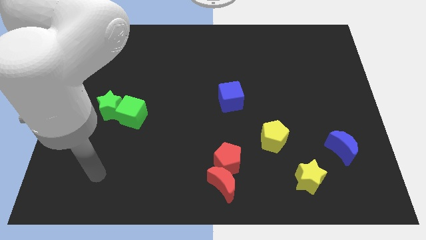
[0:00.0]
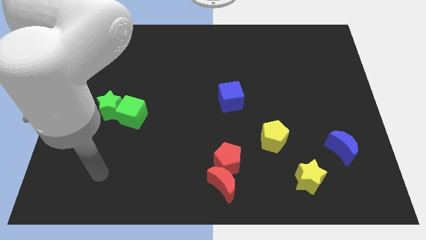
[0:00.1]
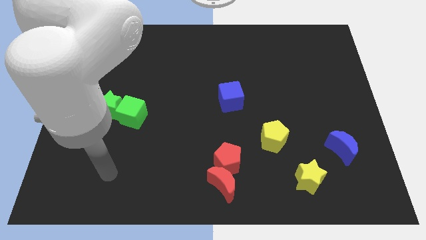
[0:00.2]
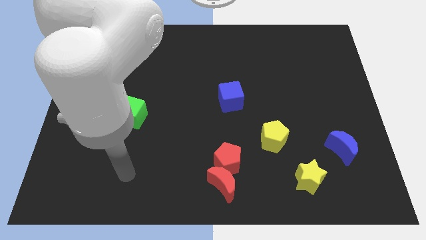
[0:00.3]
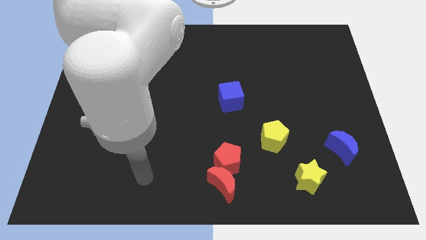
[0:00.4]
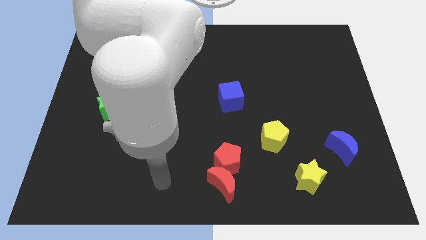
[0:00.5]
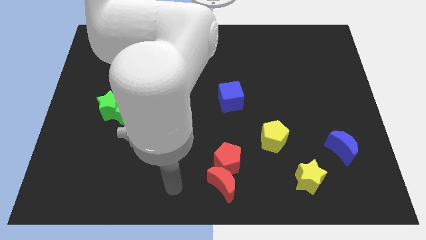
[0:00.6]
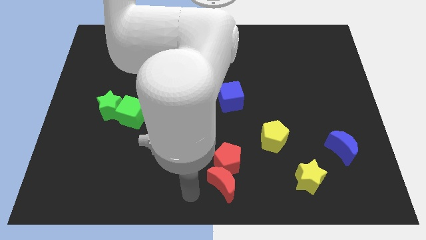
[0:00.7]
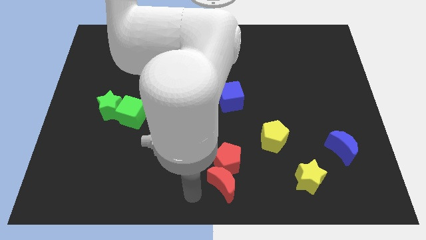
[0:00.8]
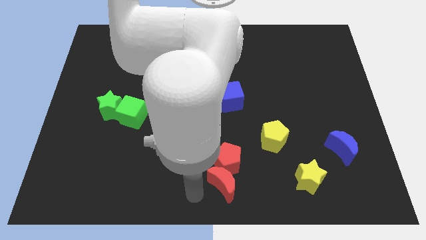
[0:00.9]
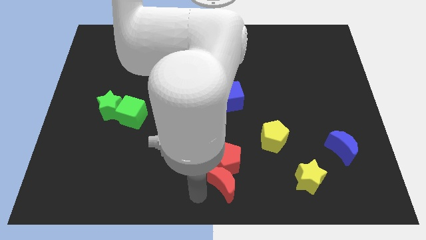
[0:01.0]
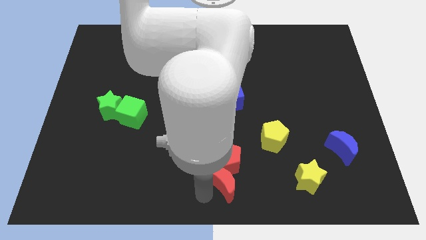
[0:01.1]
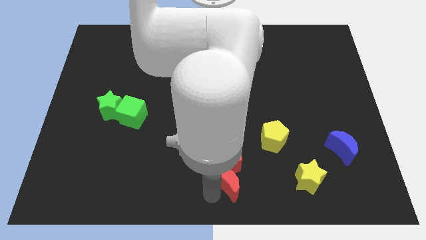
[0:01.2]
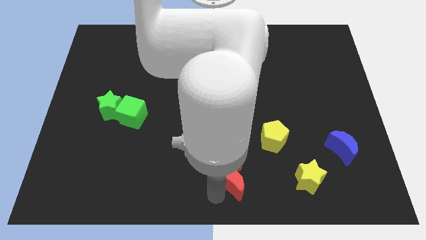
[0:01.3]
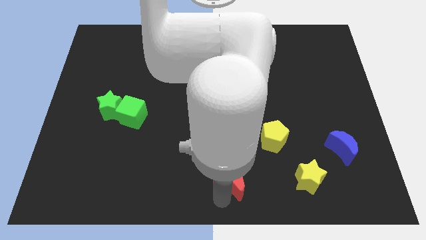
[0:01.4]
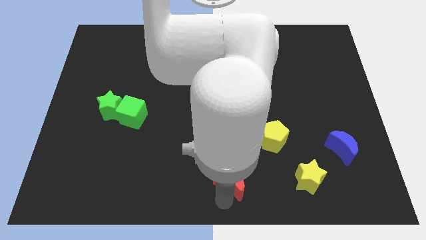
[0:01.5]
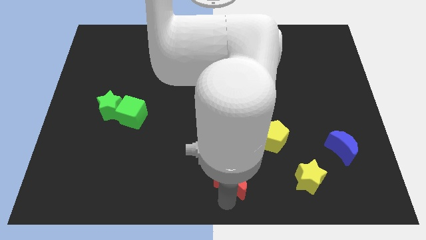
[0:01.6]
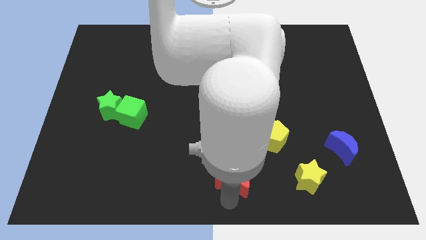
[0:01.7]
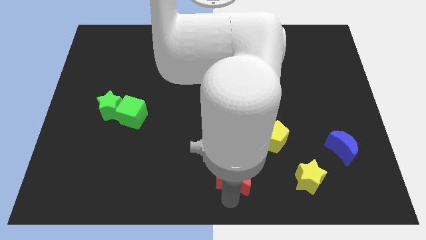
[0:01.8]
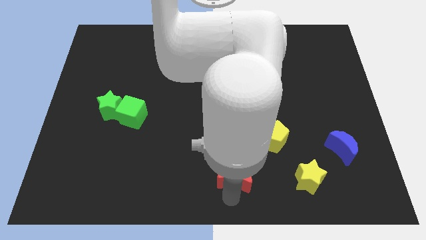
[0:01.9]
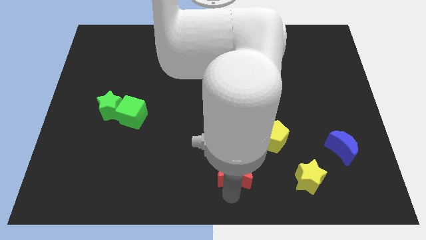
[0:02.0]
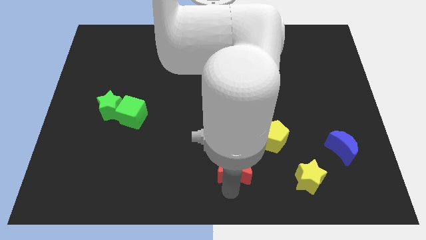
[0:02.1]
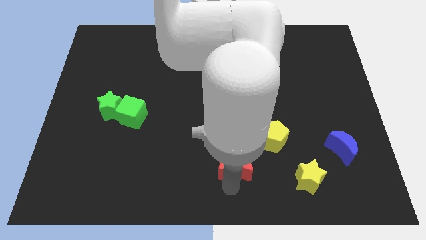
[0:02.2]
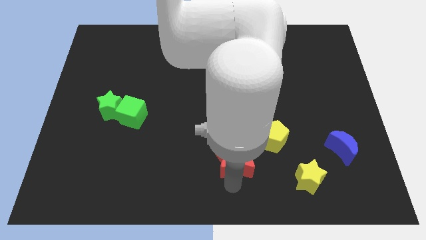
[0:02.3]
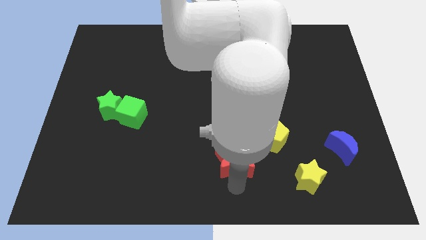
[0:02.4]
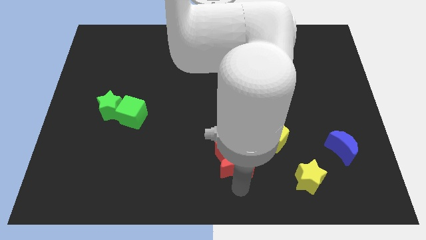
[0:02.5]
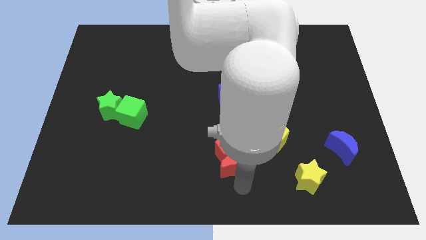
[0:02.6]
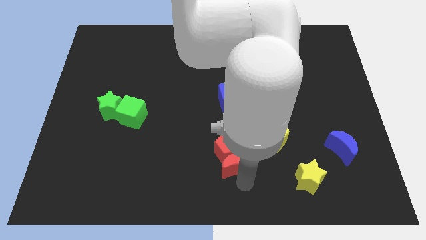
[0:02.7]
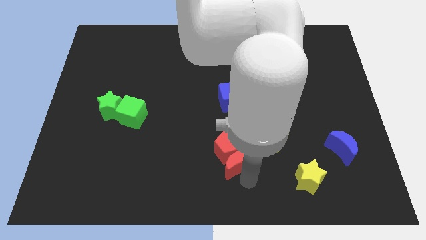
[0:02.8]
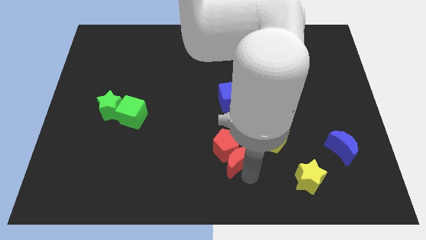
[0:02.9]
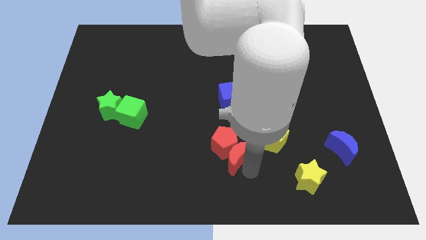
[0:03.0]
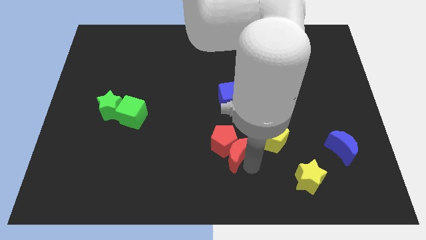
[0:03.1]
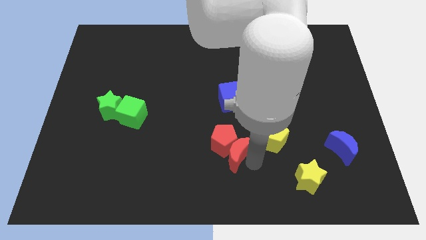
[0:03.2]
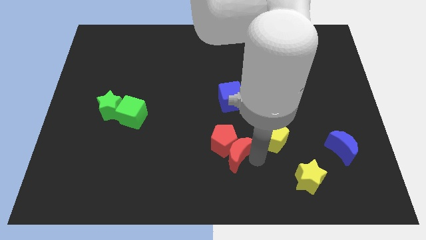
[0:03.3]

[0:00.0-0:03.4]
push red blocks bottom left of the yellow pentagon

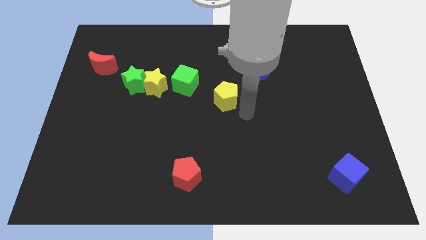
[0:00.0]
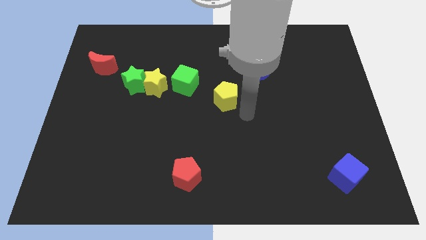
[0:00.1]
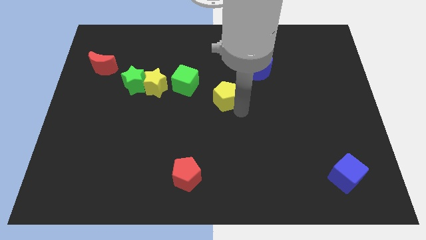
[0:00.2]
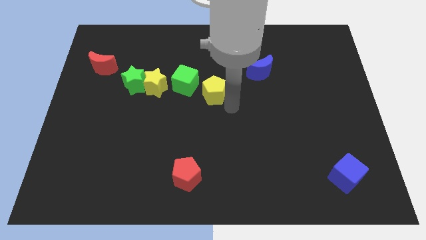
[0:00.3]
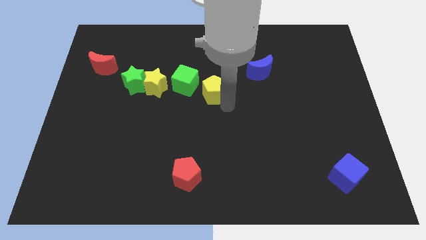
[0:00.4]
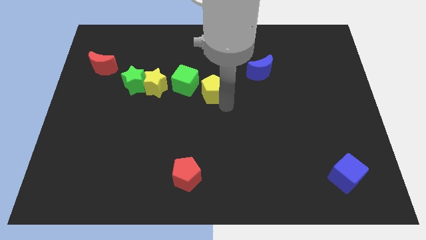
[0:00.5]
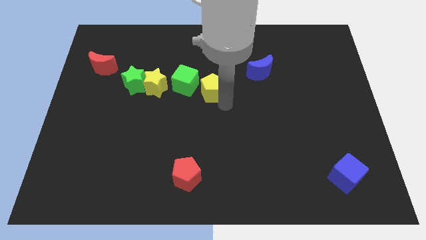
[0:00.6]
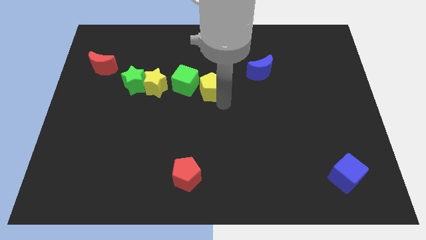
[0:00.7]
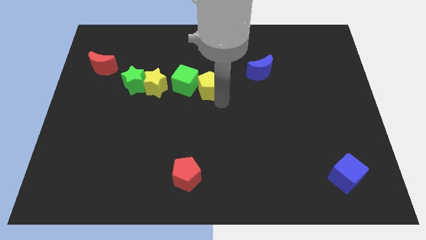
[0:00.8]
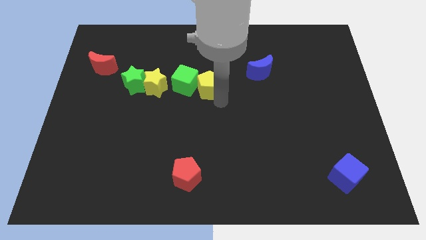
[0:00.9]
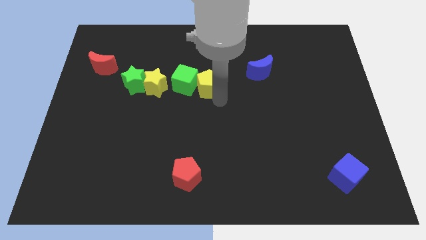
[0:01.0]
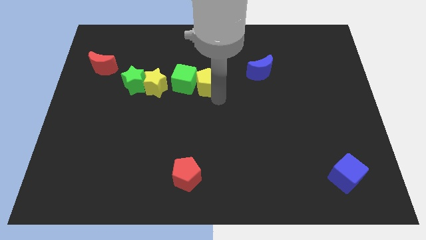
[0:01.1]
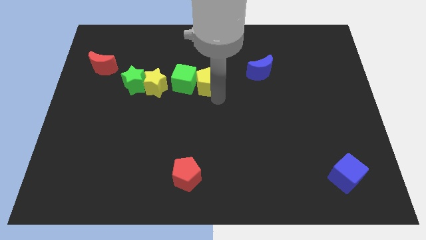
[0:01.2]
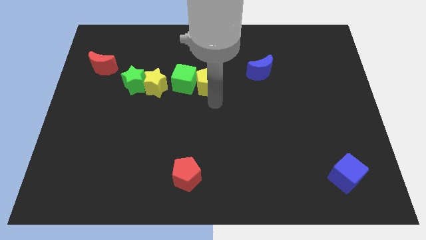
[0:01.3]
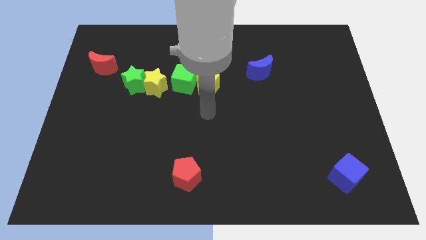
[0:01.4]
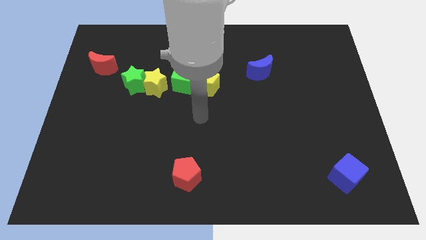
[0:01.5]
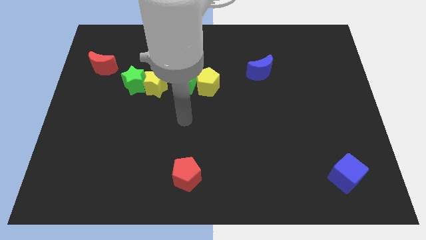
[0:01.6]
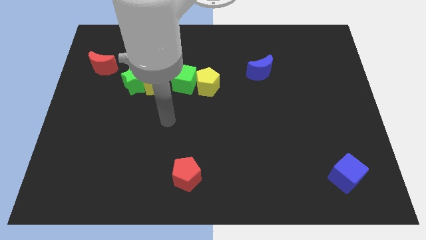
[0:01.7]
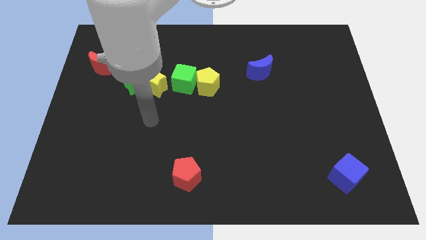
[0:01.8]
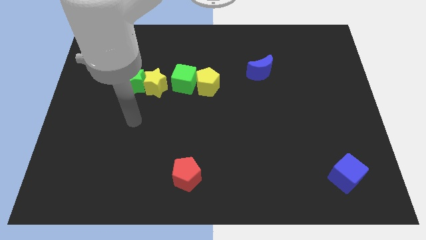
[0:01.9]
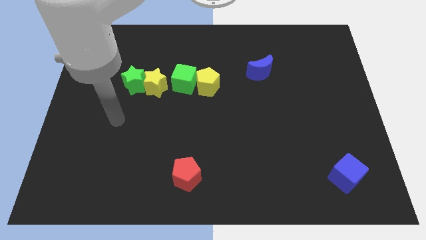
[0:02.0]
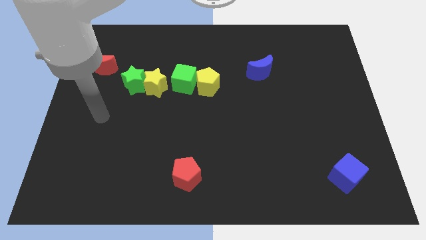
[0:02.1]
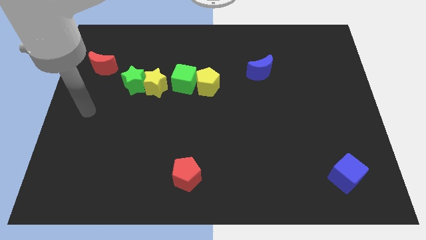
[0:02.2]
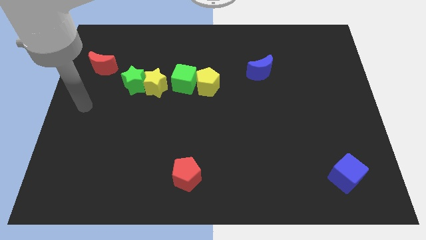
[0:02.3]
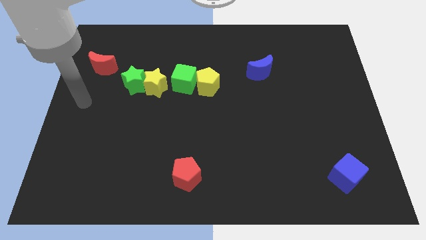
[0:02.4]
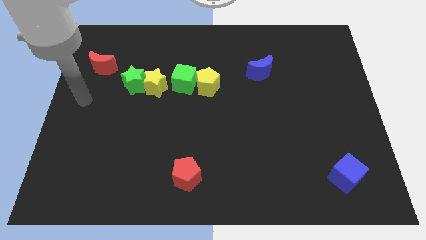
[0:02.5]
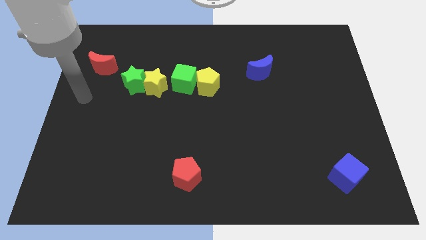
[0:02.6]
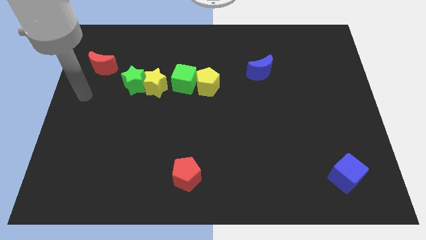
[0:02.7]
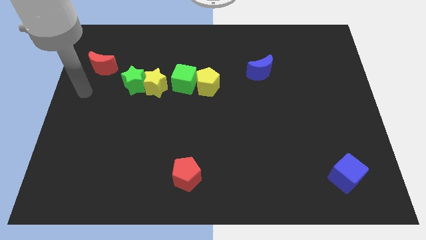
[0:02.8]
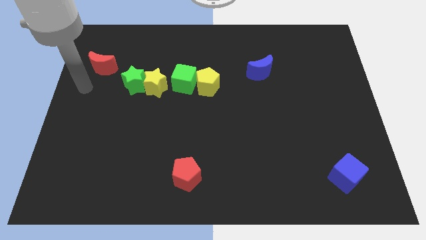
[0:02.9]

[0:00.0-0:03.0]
move yellow pentagon adjacent to green cube

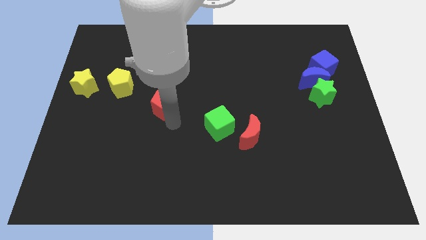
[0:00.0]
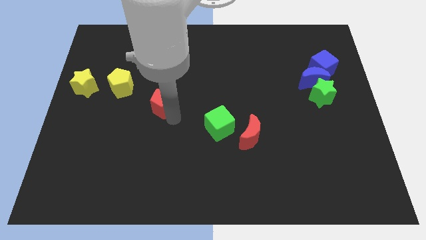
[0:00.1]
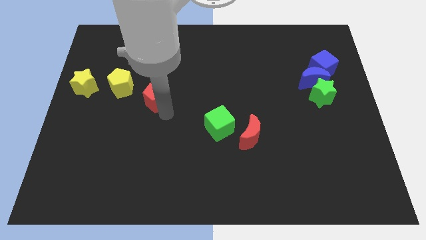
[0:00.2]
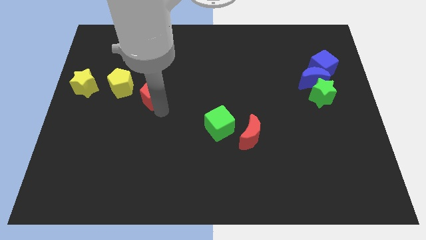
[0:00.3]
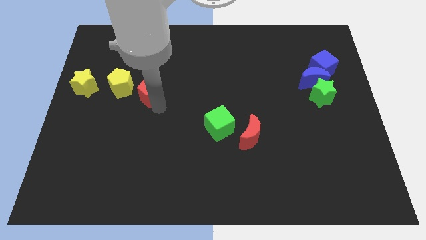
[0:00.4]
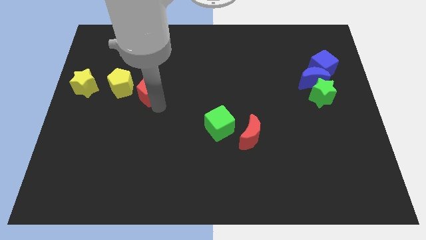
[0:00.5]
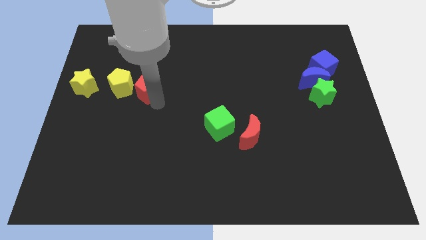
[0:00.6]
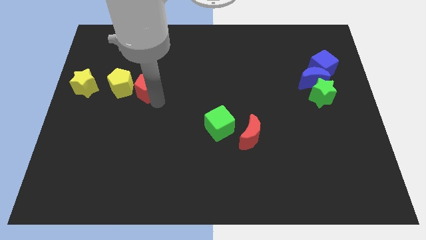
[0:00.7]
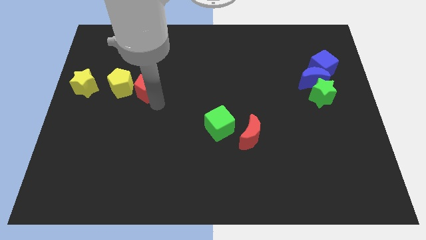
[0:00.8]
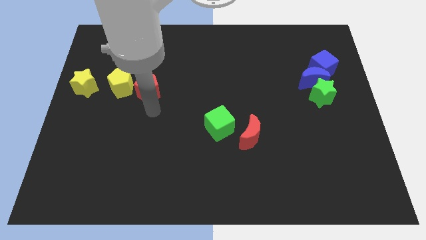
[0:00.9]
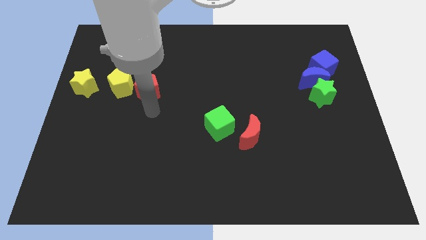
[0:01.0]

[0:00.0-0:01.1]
place the red pentagon to the right of the yellow penatgon

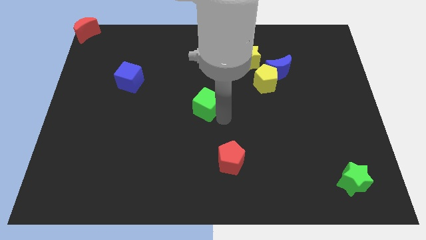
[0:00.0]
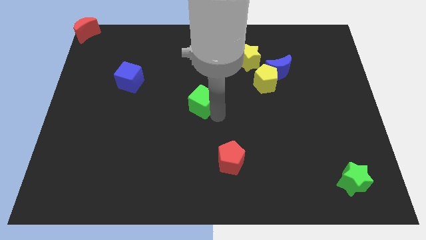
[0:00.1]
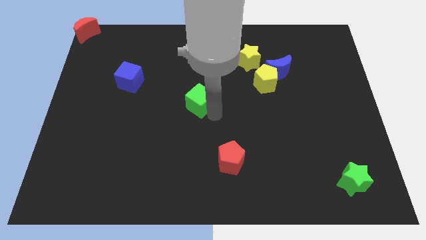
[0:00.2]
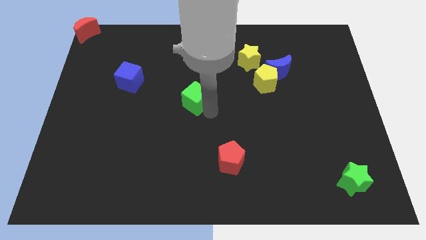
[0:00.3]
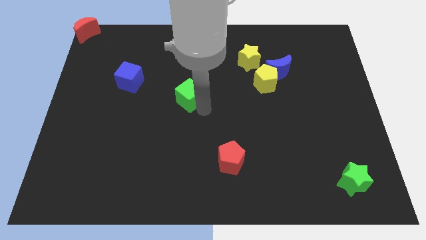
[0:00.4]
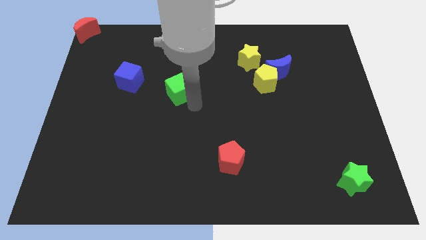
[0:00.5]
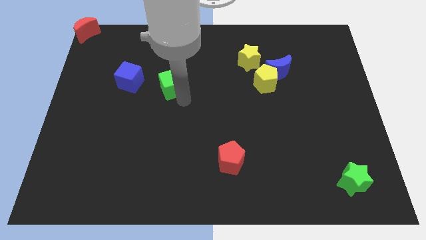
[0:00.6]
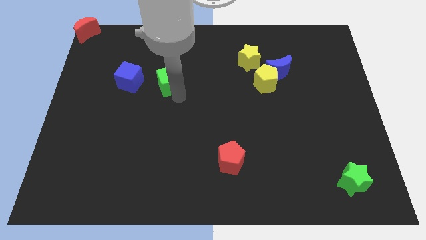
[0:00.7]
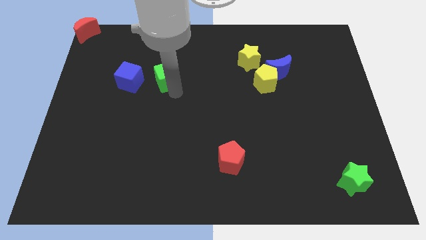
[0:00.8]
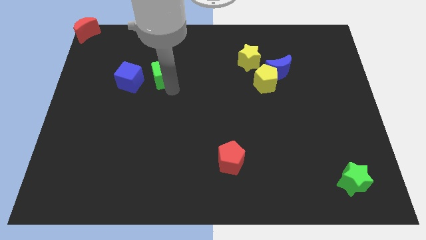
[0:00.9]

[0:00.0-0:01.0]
push the green cube parallel to the blue cube

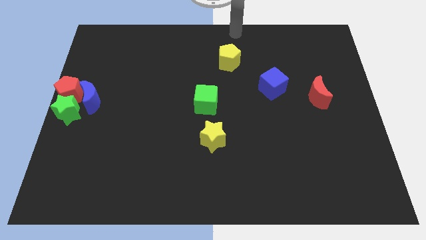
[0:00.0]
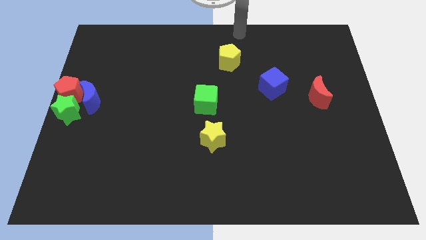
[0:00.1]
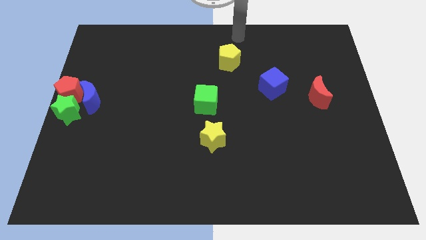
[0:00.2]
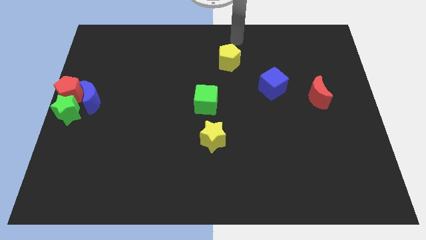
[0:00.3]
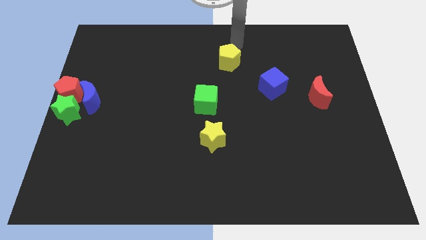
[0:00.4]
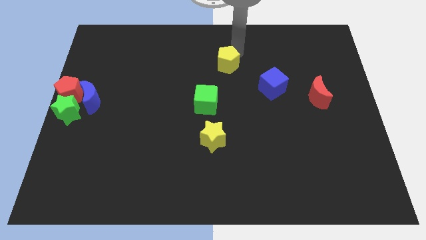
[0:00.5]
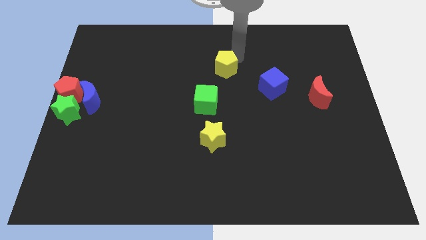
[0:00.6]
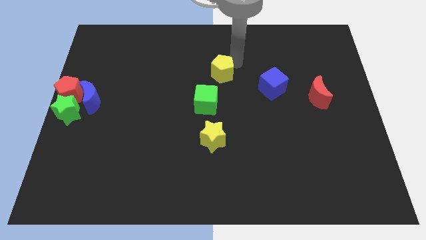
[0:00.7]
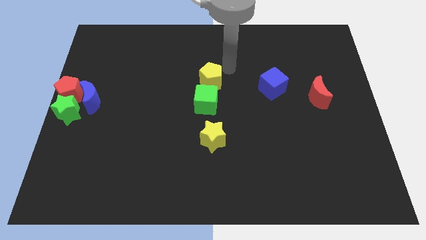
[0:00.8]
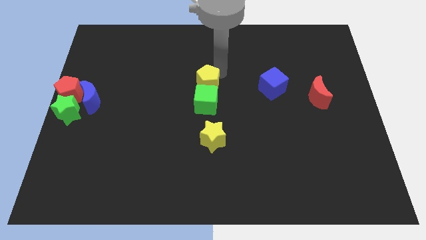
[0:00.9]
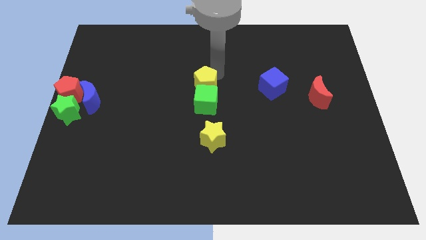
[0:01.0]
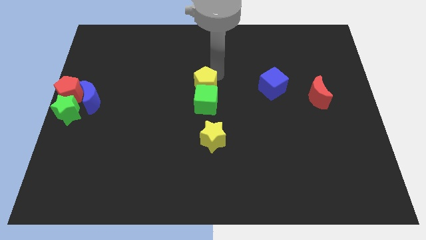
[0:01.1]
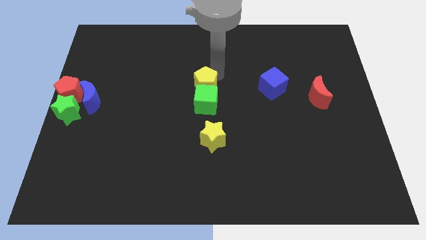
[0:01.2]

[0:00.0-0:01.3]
attach the yellow pentagon to the green cube
